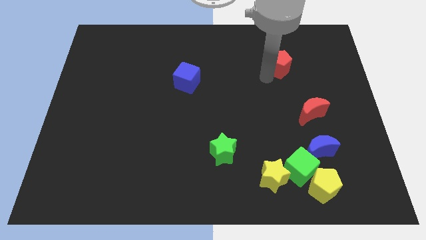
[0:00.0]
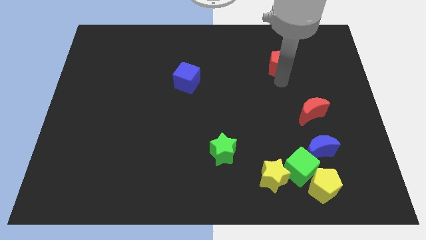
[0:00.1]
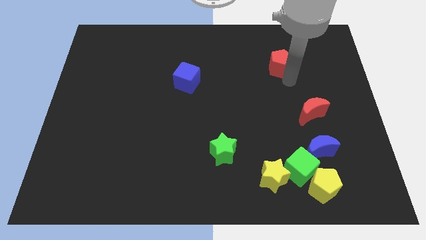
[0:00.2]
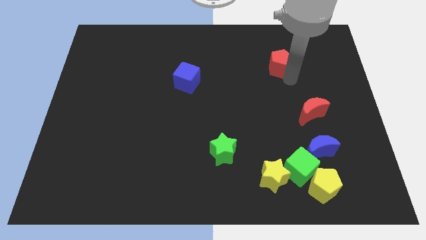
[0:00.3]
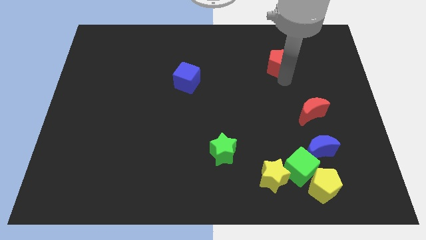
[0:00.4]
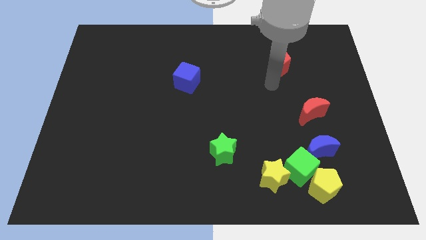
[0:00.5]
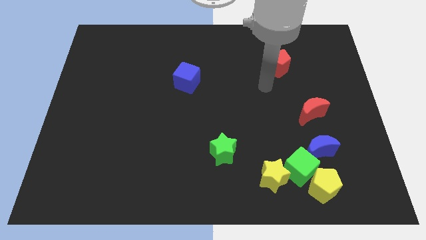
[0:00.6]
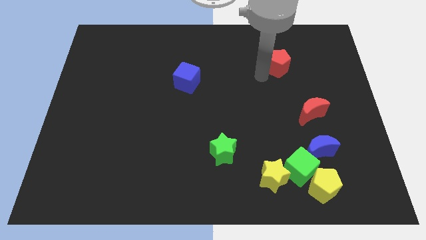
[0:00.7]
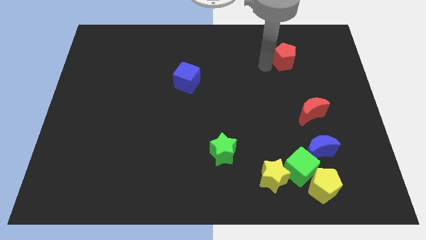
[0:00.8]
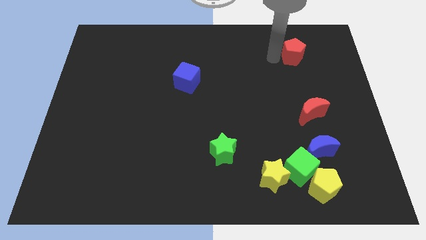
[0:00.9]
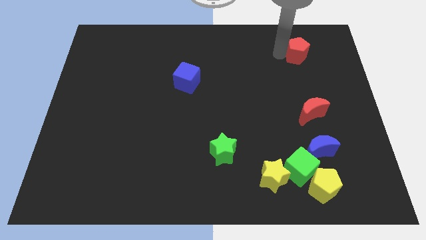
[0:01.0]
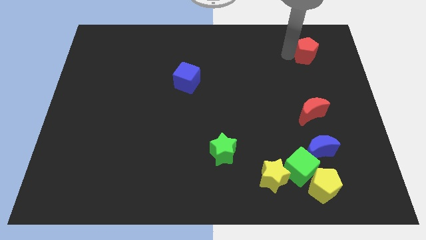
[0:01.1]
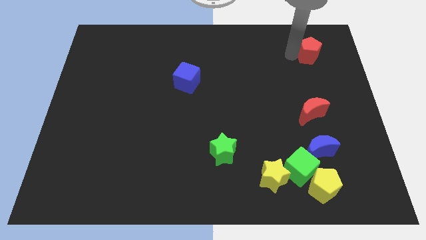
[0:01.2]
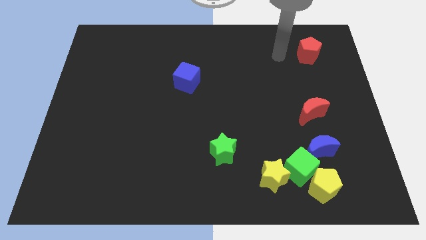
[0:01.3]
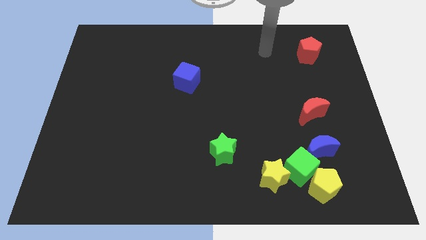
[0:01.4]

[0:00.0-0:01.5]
slide the red pentagon towards the top right corner of the board

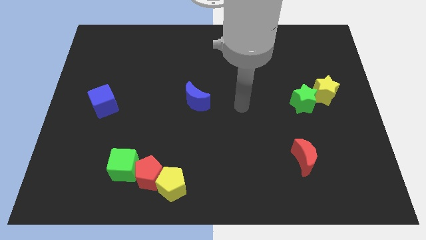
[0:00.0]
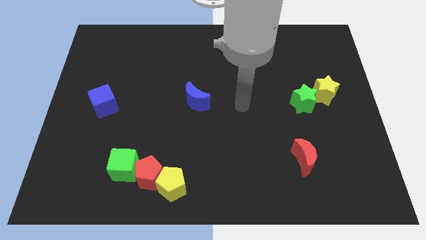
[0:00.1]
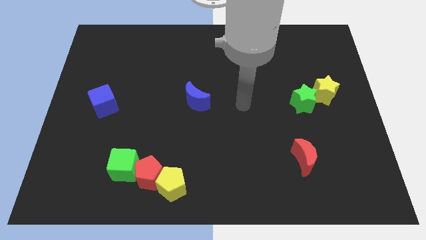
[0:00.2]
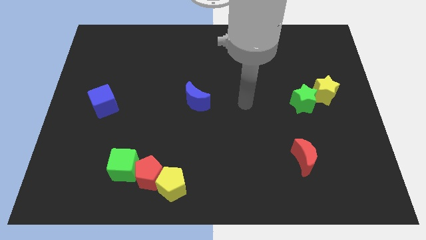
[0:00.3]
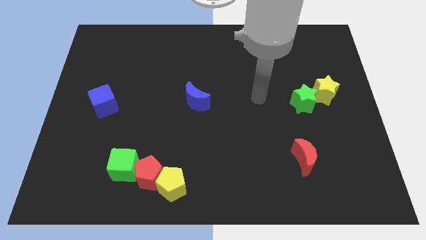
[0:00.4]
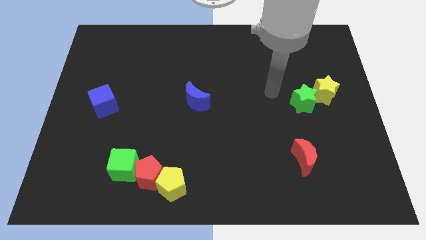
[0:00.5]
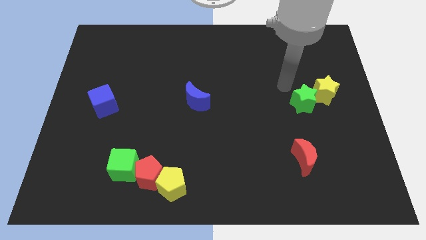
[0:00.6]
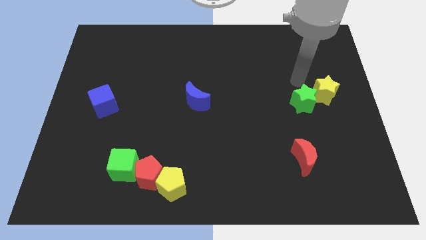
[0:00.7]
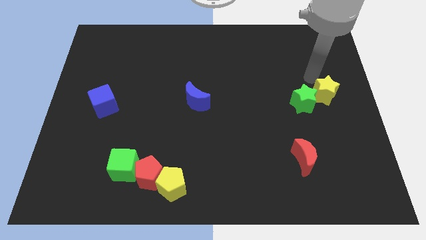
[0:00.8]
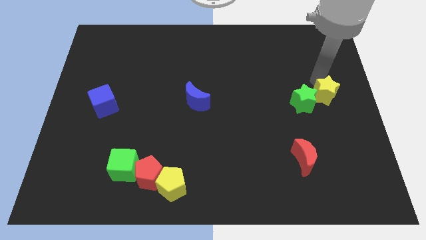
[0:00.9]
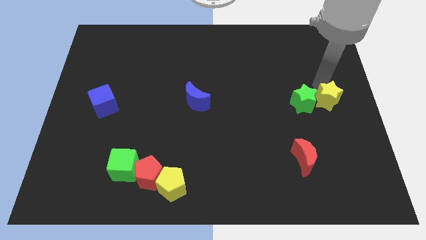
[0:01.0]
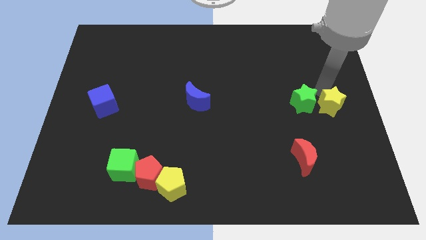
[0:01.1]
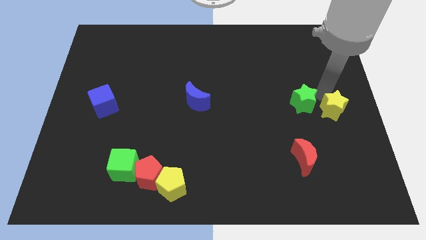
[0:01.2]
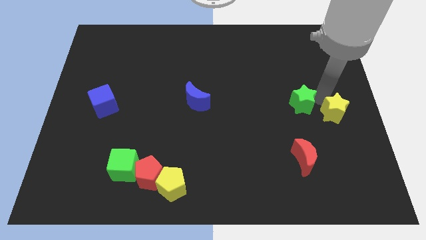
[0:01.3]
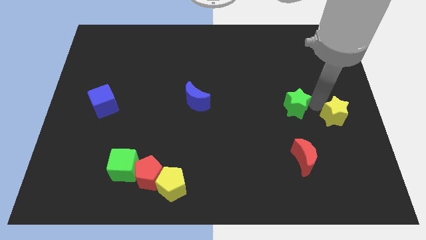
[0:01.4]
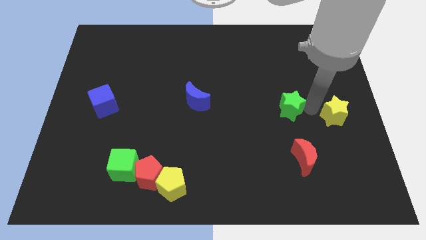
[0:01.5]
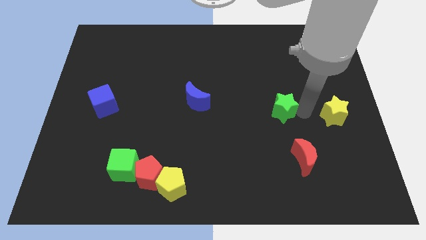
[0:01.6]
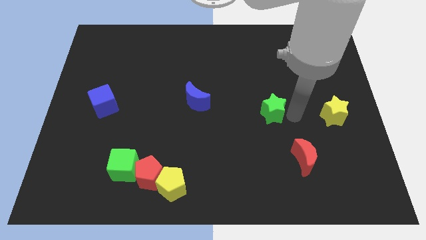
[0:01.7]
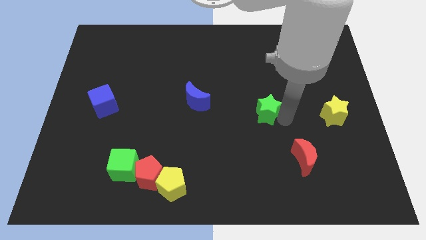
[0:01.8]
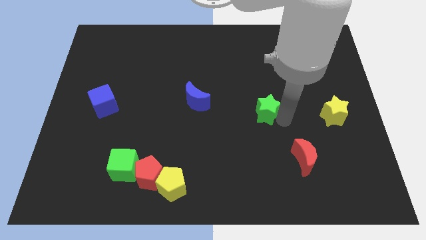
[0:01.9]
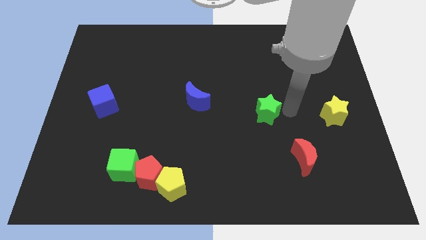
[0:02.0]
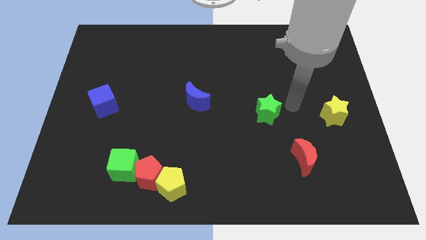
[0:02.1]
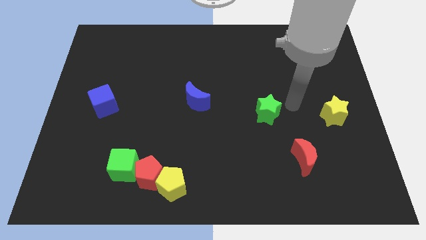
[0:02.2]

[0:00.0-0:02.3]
separate the green star and yellow star

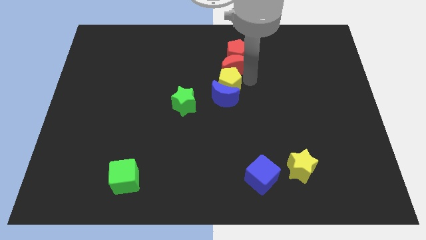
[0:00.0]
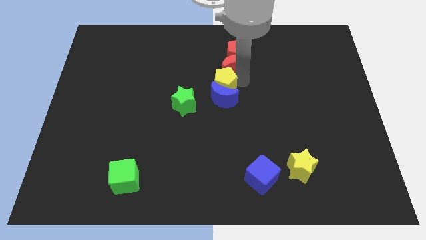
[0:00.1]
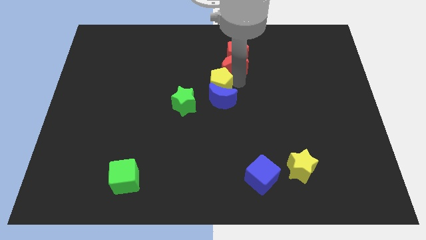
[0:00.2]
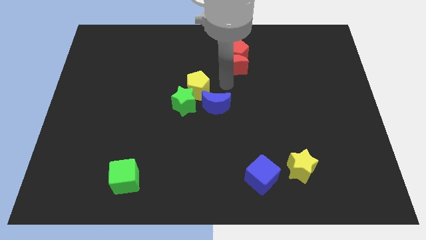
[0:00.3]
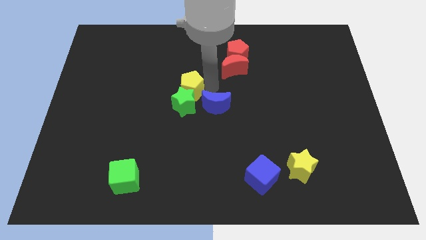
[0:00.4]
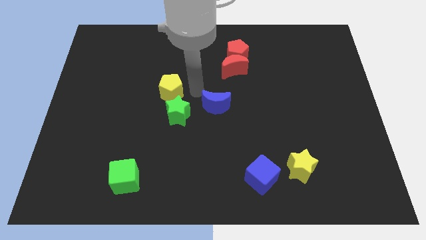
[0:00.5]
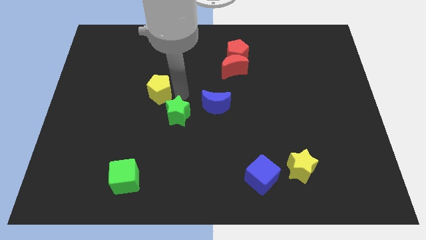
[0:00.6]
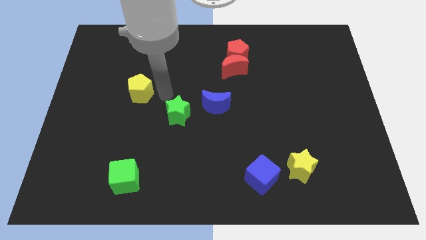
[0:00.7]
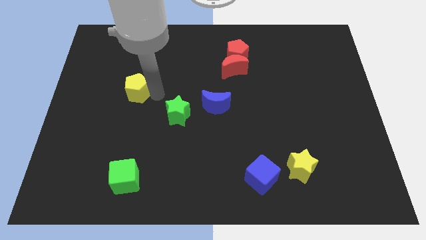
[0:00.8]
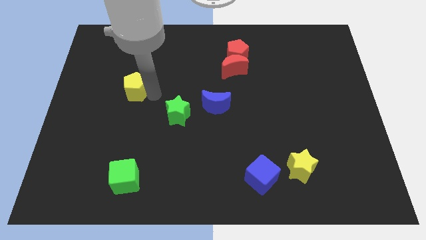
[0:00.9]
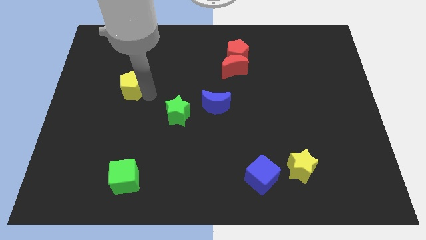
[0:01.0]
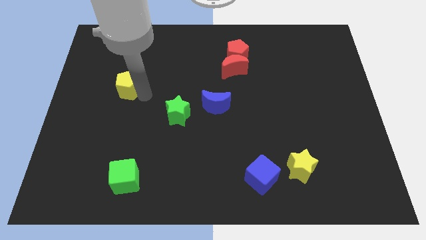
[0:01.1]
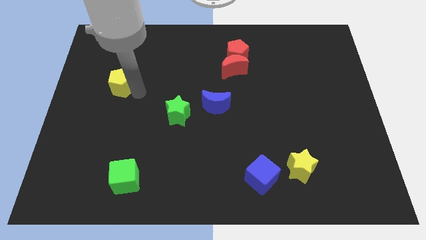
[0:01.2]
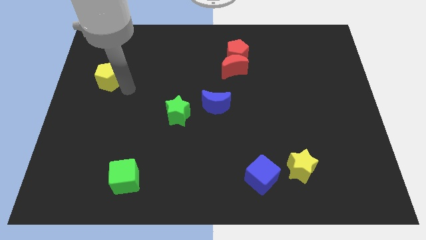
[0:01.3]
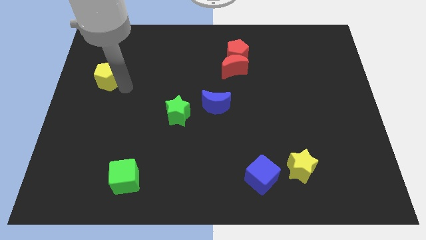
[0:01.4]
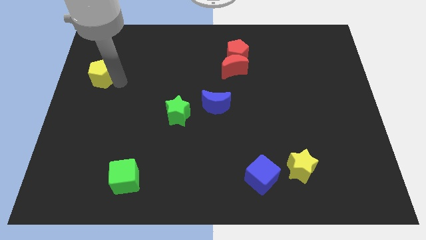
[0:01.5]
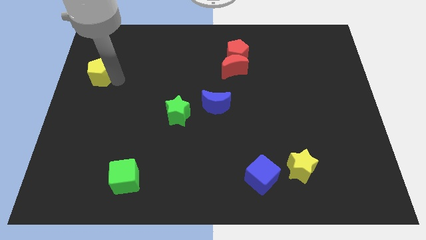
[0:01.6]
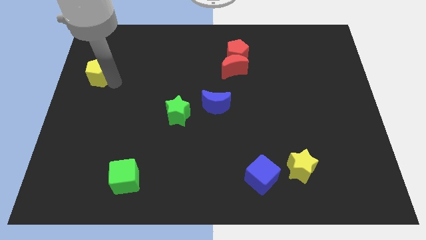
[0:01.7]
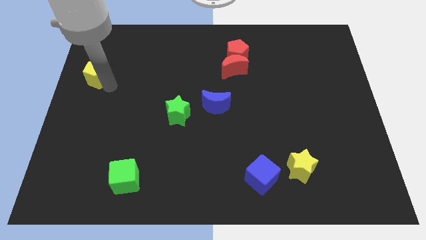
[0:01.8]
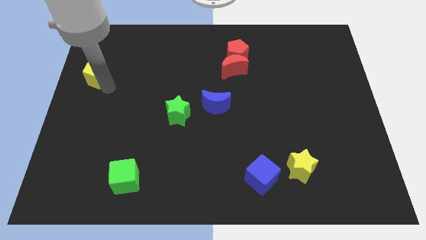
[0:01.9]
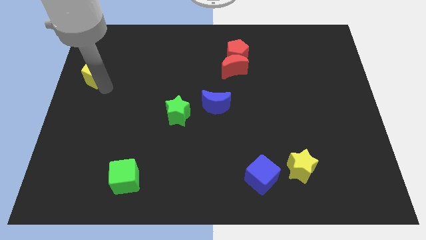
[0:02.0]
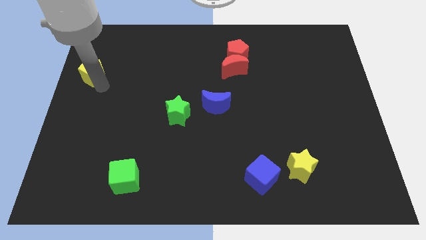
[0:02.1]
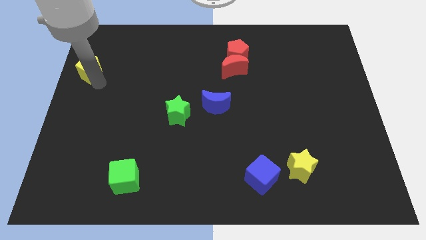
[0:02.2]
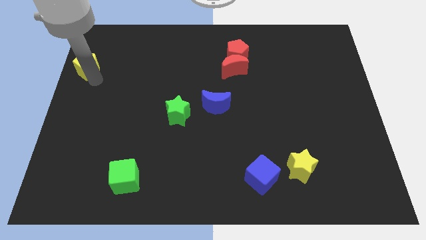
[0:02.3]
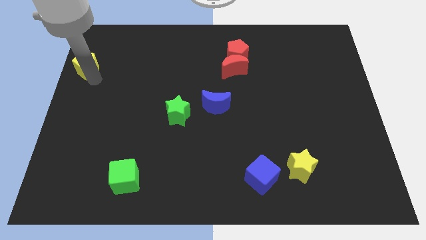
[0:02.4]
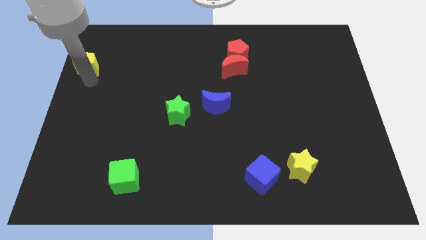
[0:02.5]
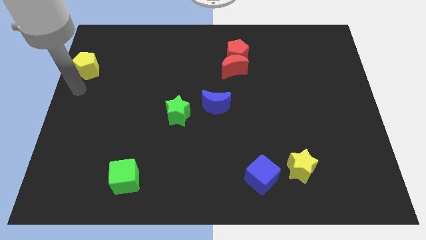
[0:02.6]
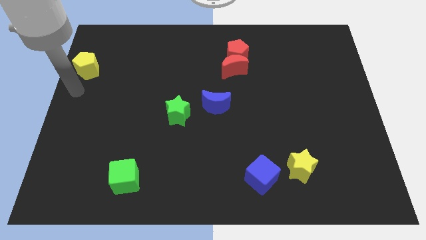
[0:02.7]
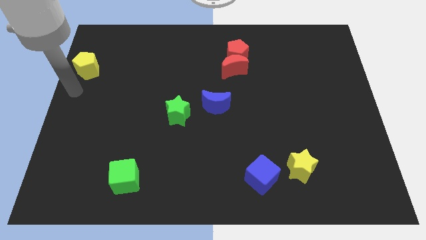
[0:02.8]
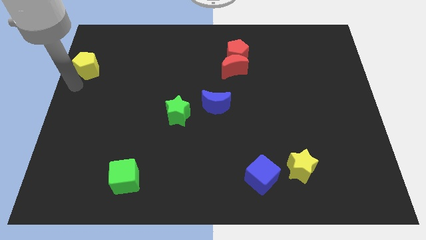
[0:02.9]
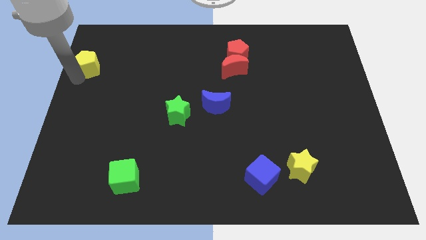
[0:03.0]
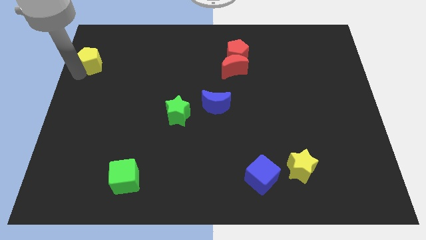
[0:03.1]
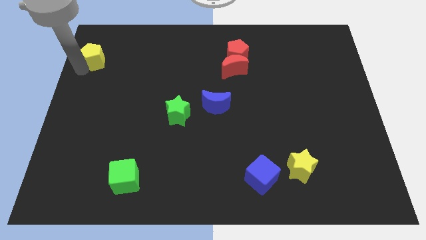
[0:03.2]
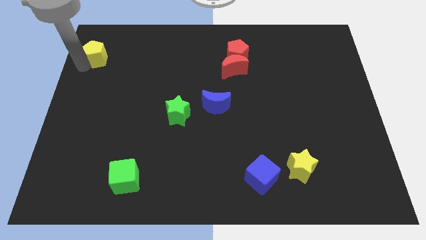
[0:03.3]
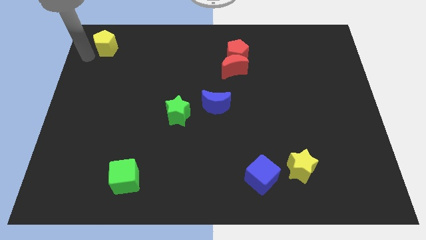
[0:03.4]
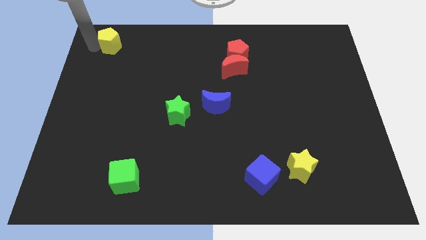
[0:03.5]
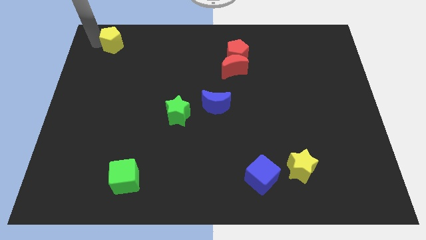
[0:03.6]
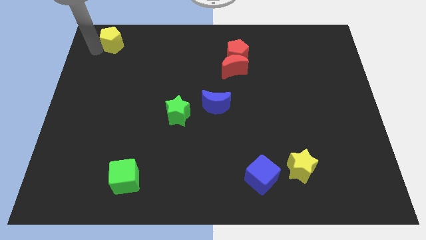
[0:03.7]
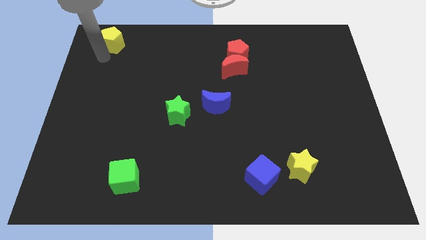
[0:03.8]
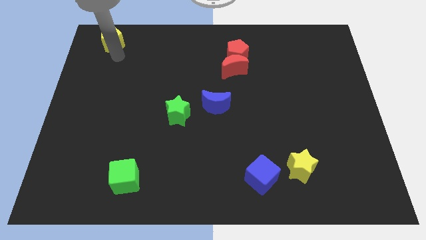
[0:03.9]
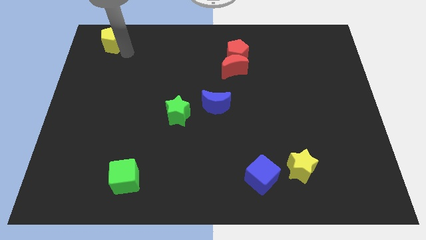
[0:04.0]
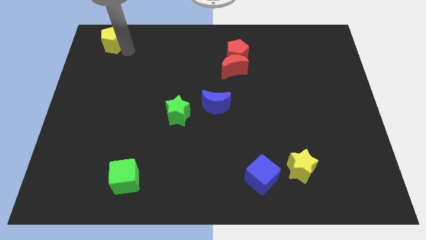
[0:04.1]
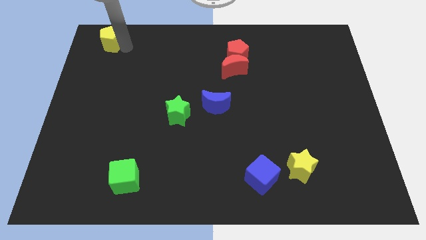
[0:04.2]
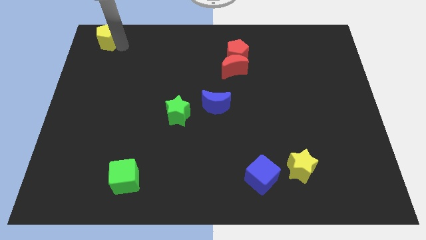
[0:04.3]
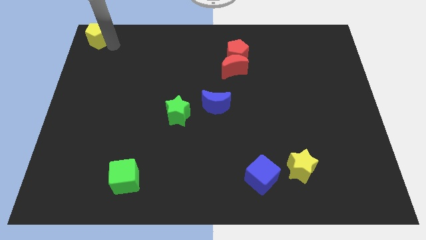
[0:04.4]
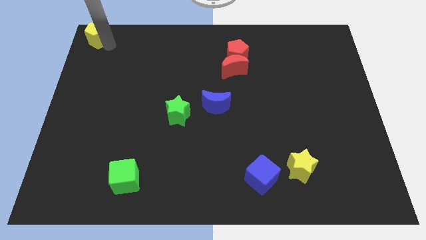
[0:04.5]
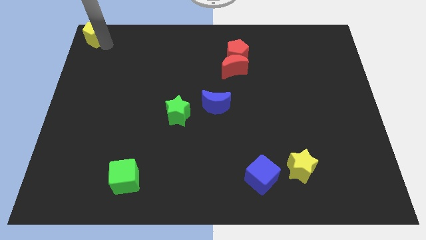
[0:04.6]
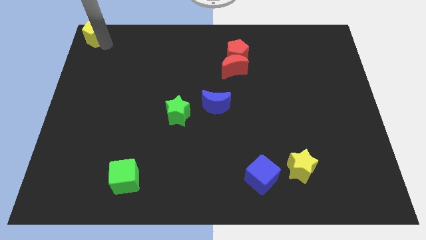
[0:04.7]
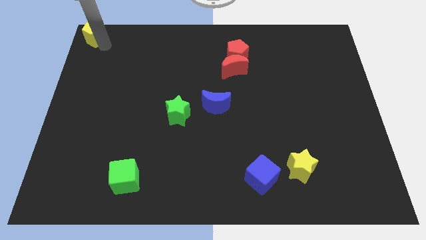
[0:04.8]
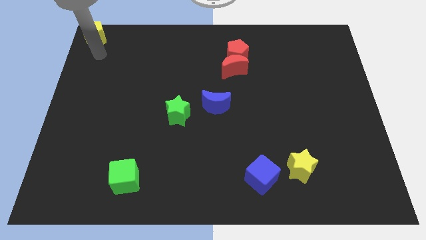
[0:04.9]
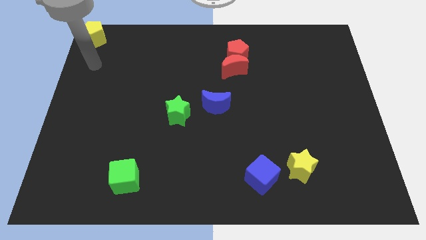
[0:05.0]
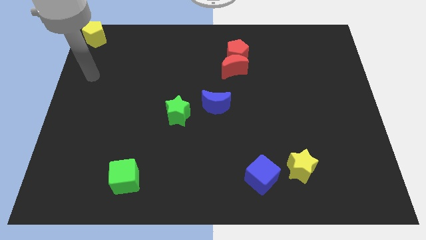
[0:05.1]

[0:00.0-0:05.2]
push the yellow pentagon to the top left corner
